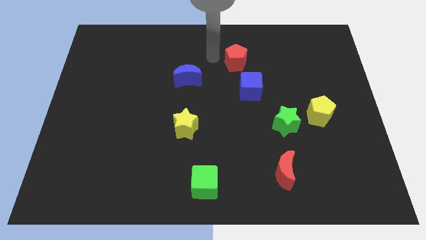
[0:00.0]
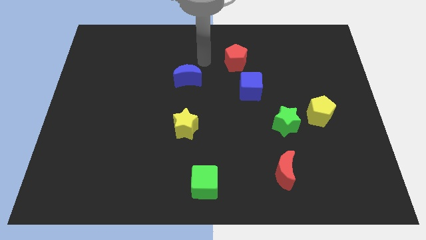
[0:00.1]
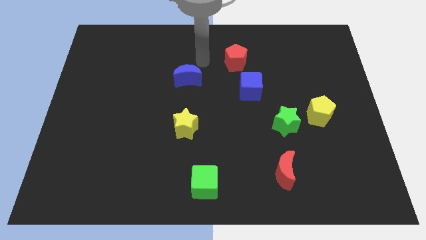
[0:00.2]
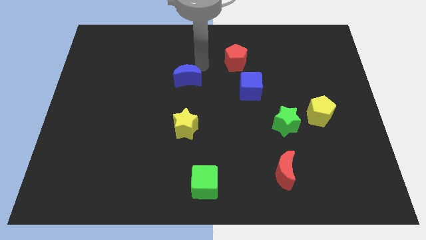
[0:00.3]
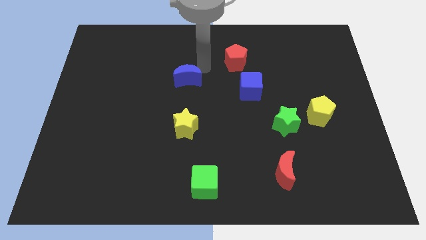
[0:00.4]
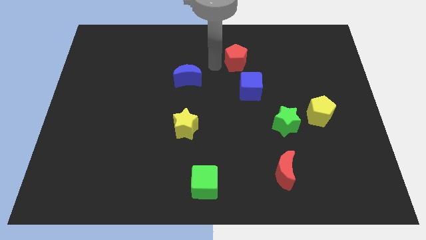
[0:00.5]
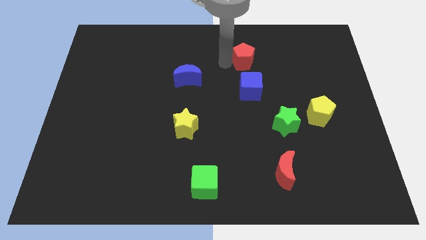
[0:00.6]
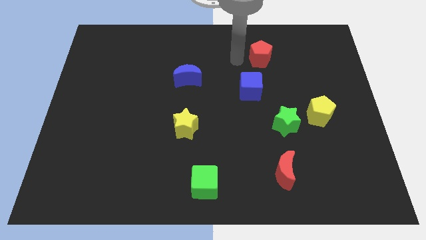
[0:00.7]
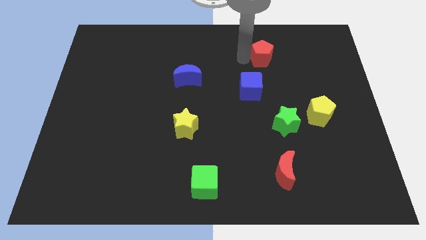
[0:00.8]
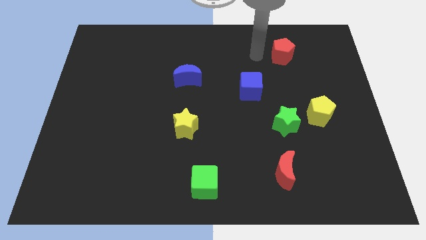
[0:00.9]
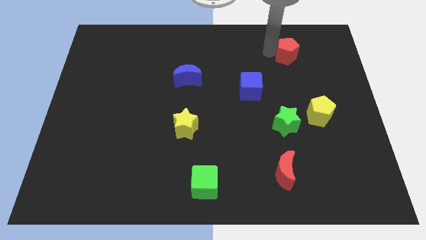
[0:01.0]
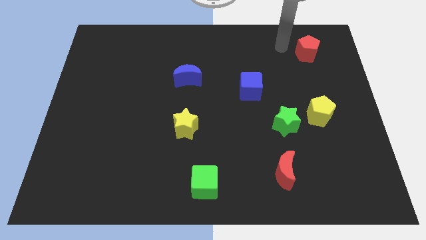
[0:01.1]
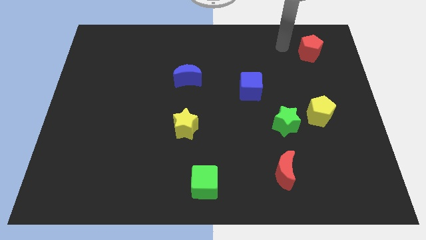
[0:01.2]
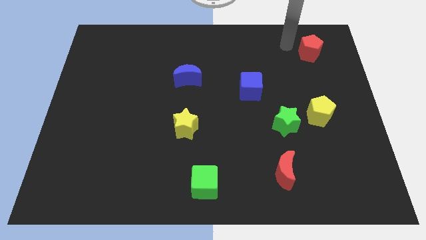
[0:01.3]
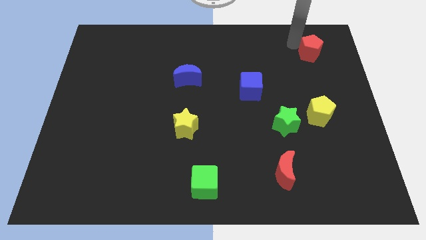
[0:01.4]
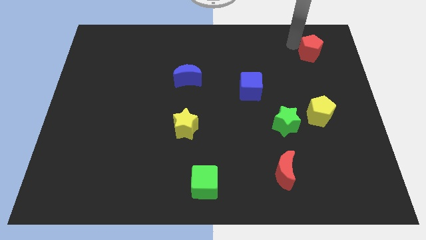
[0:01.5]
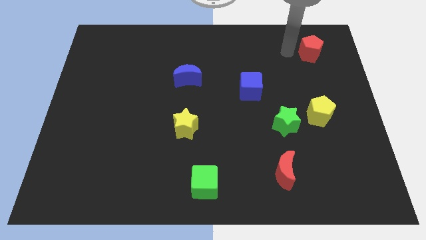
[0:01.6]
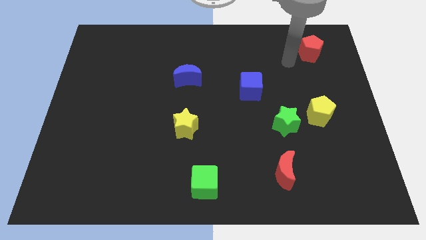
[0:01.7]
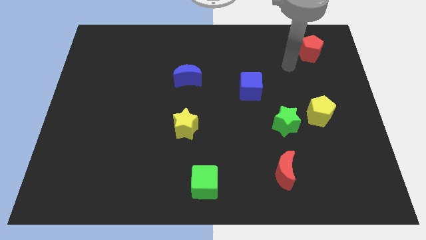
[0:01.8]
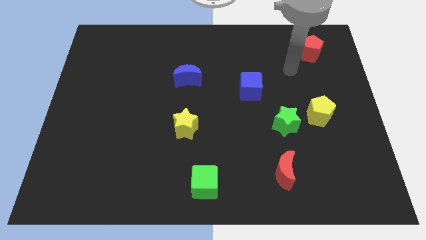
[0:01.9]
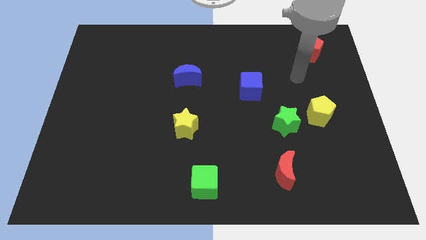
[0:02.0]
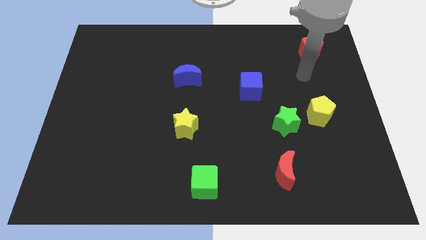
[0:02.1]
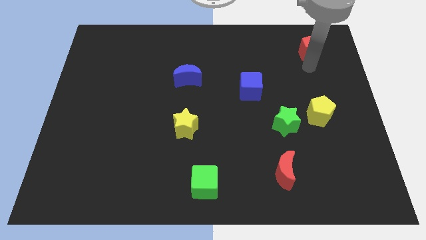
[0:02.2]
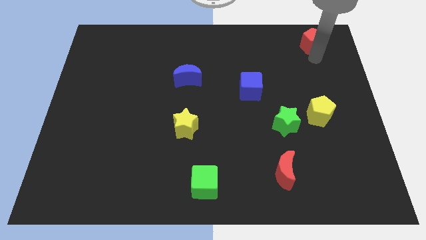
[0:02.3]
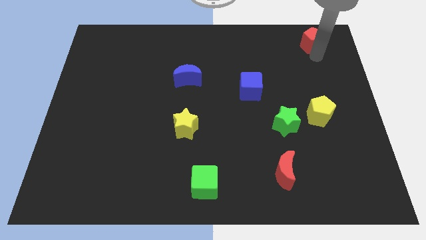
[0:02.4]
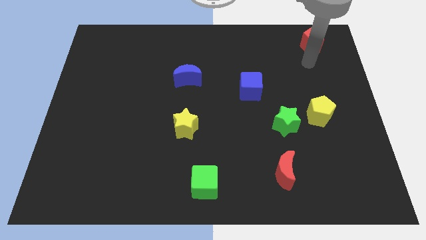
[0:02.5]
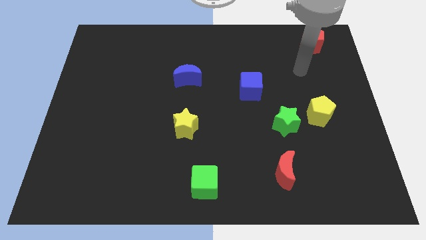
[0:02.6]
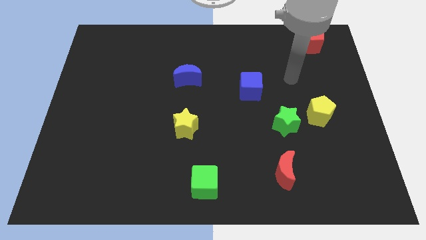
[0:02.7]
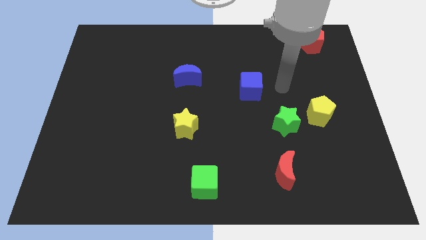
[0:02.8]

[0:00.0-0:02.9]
move the red pentagon to the top right corner of the board

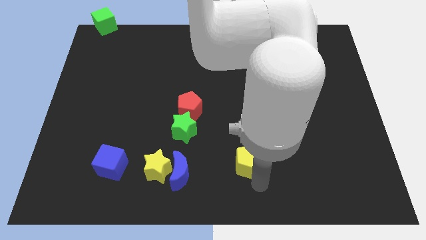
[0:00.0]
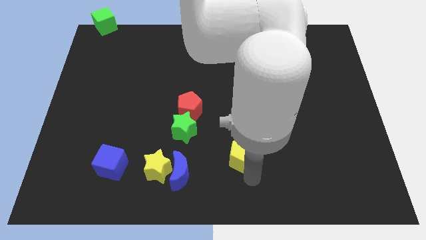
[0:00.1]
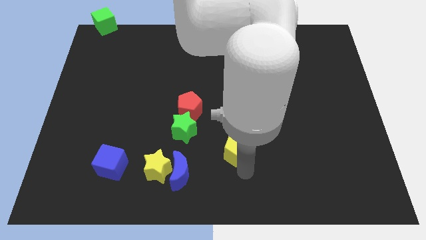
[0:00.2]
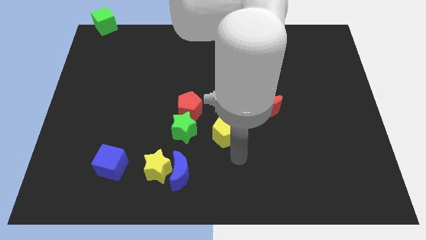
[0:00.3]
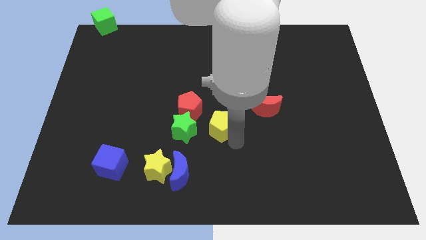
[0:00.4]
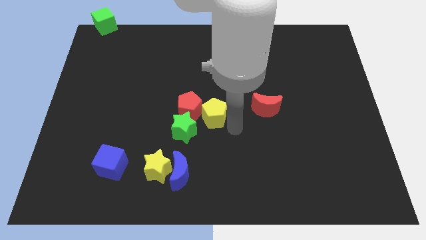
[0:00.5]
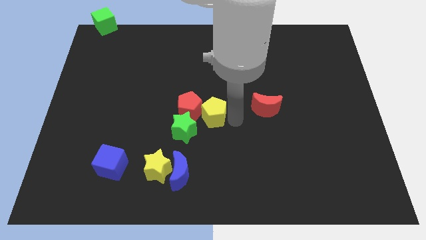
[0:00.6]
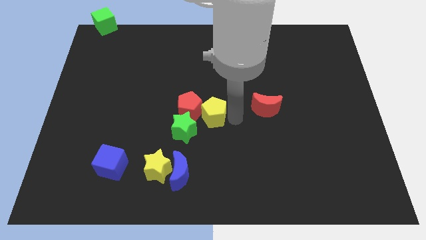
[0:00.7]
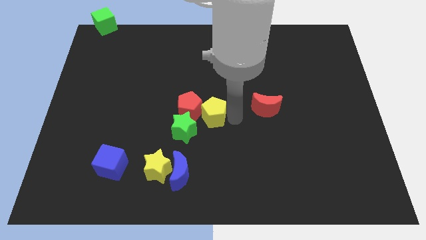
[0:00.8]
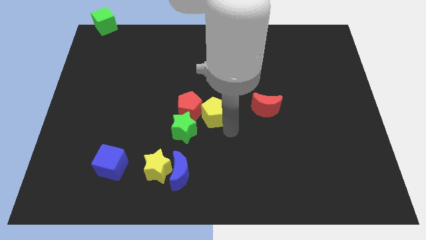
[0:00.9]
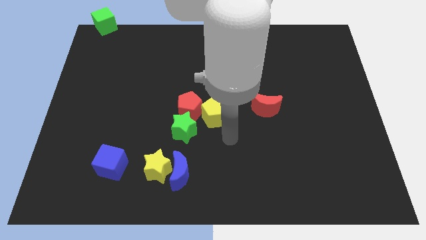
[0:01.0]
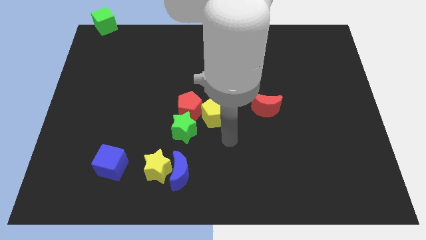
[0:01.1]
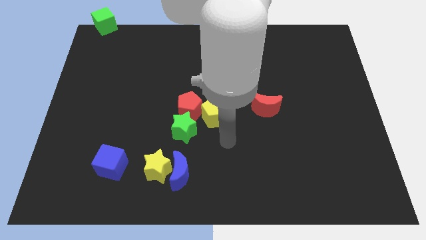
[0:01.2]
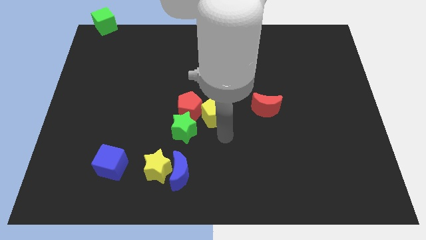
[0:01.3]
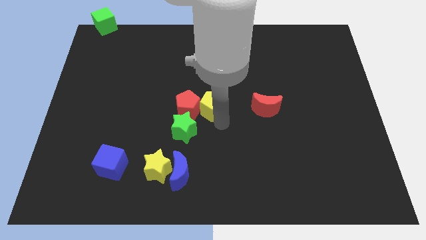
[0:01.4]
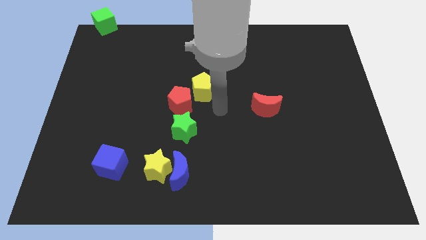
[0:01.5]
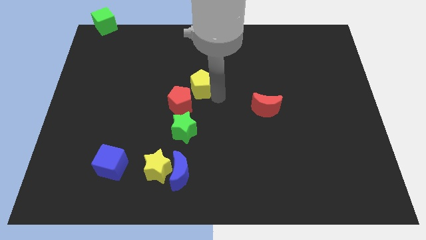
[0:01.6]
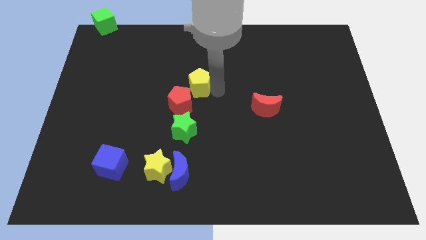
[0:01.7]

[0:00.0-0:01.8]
push the yellow pentagon to the center

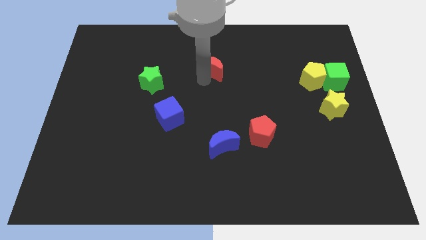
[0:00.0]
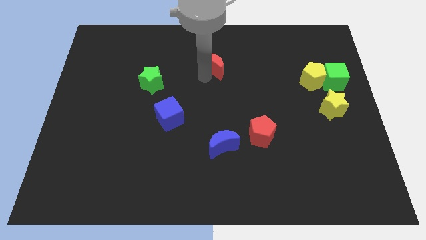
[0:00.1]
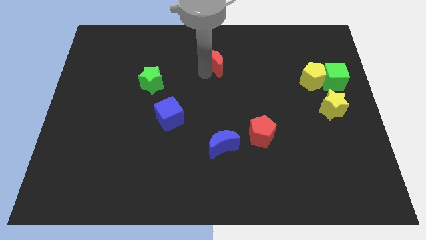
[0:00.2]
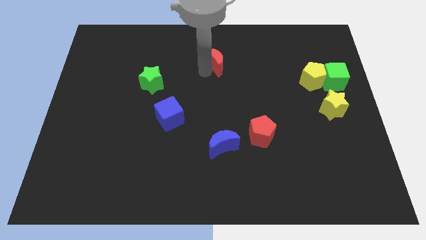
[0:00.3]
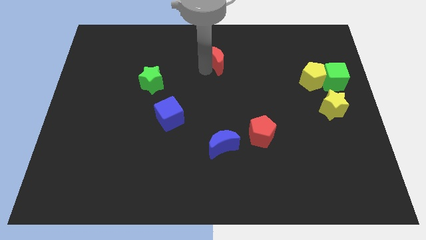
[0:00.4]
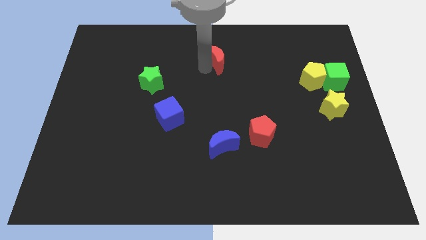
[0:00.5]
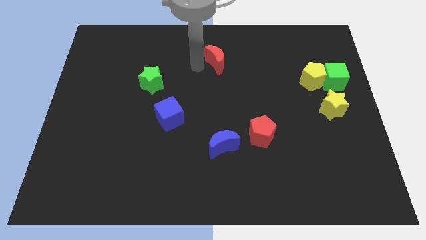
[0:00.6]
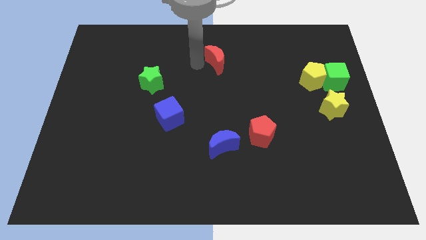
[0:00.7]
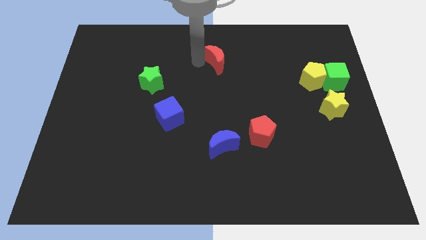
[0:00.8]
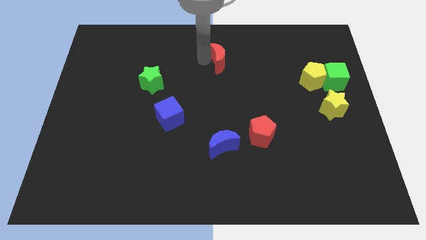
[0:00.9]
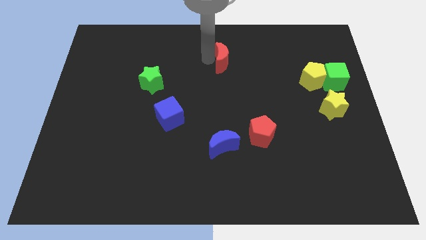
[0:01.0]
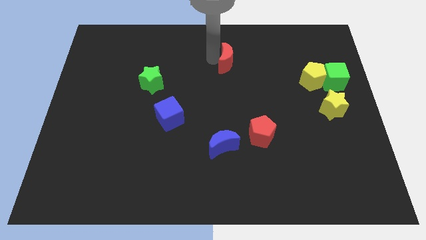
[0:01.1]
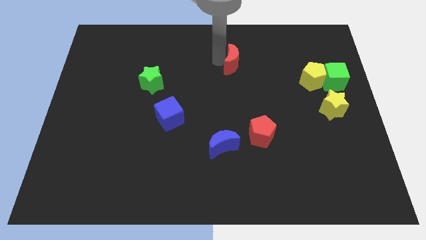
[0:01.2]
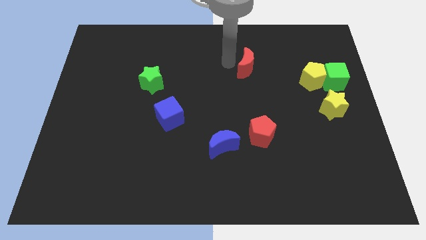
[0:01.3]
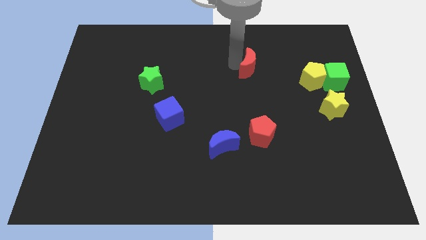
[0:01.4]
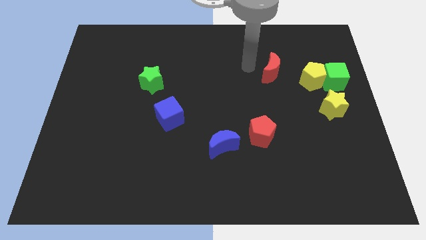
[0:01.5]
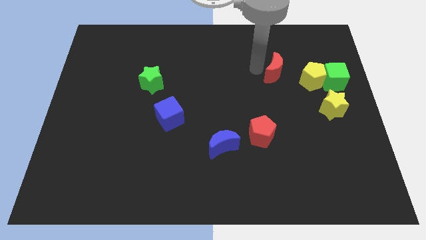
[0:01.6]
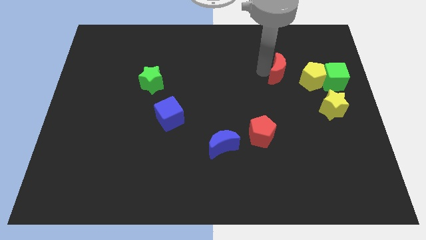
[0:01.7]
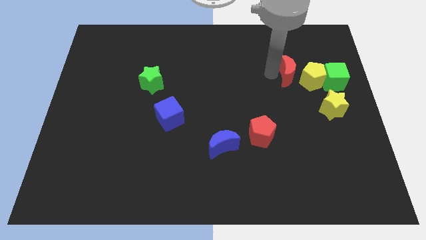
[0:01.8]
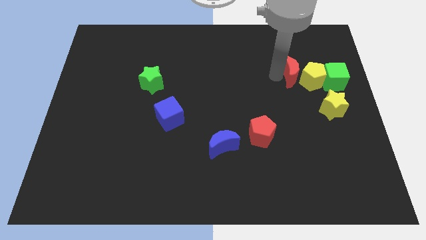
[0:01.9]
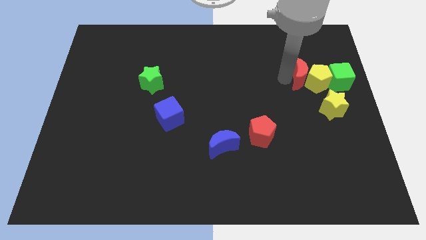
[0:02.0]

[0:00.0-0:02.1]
make the red crescent to touch the yellow pentagon

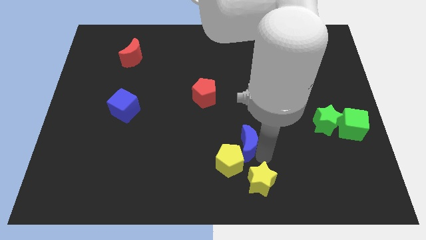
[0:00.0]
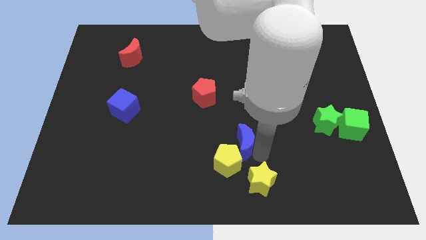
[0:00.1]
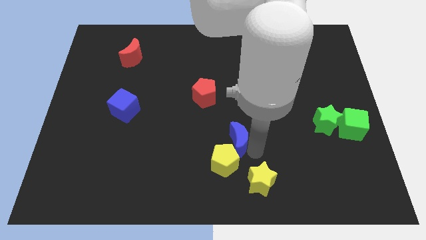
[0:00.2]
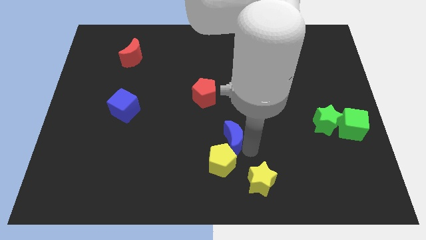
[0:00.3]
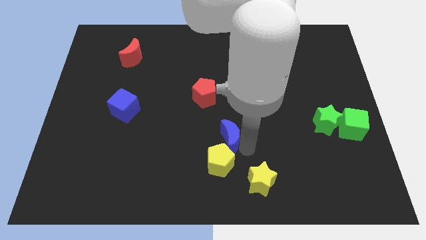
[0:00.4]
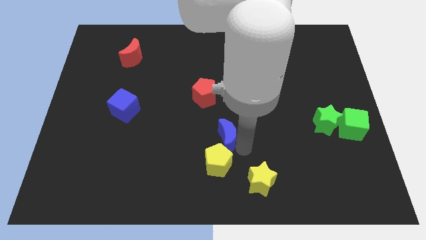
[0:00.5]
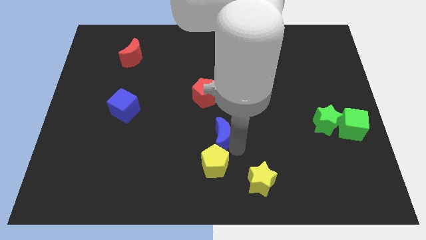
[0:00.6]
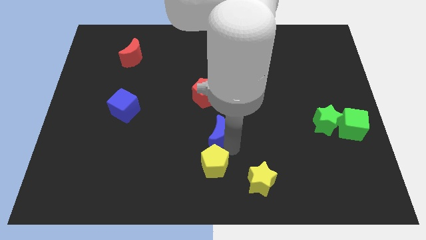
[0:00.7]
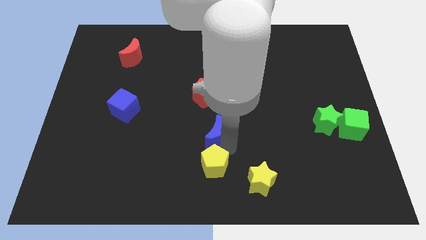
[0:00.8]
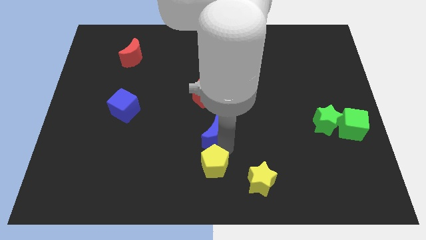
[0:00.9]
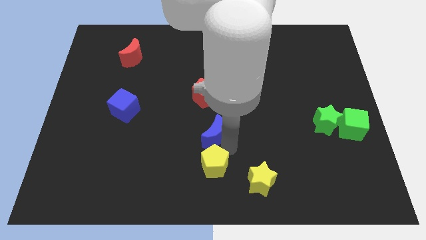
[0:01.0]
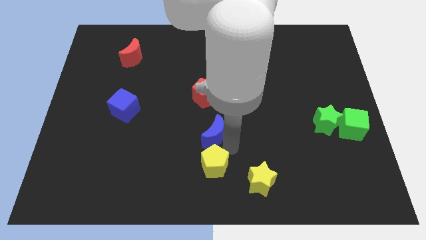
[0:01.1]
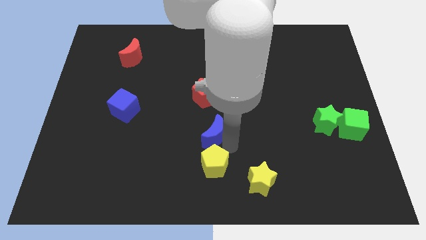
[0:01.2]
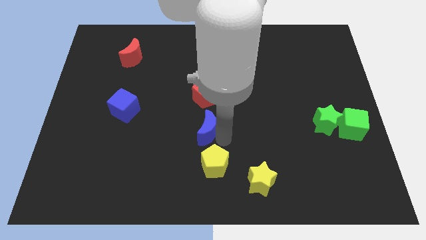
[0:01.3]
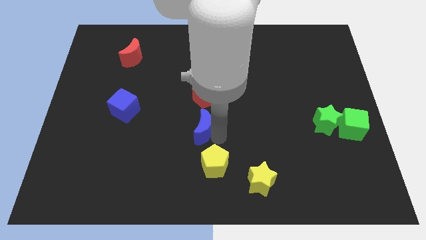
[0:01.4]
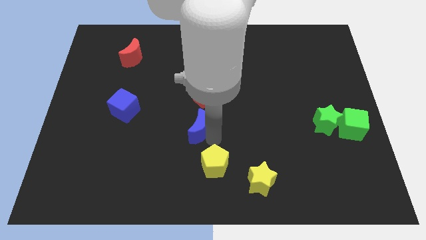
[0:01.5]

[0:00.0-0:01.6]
place the blue moon in between the red pentagon and yellow pentgaon

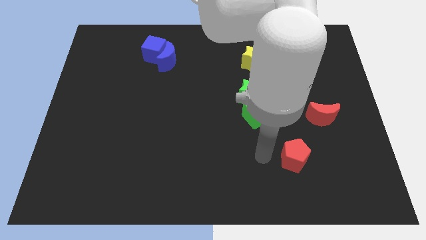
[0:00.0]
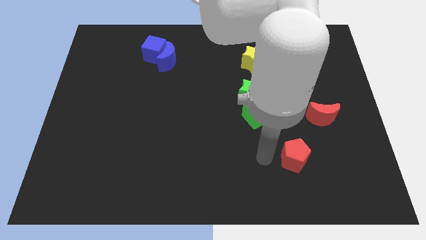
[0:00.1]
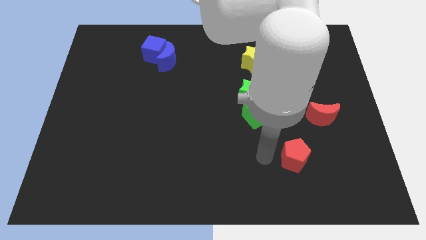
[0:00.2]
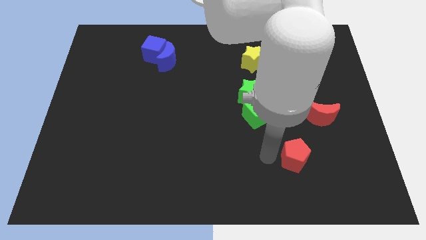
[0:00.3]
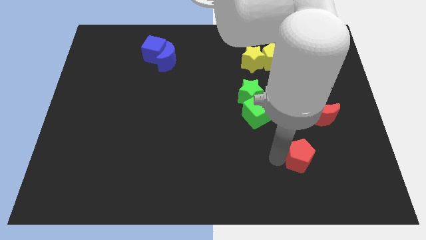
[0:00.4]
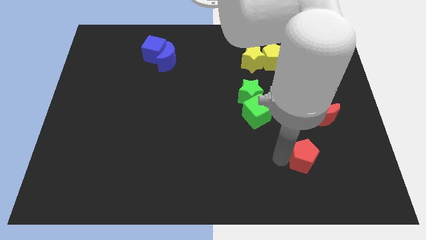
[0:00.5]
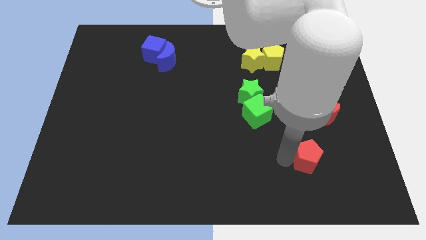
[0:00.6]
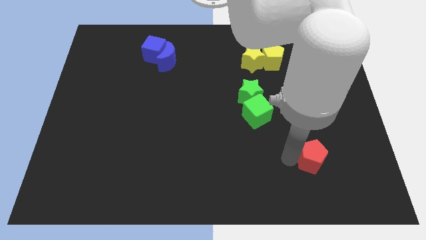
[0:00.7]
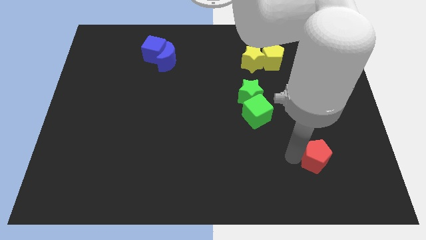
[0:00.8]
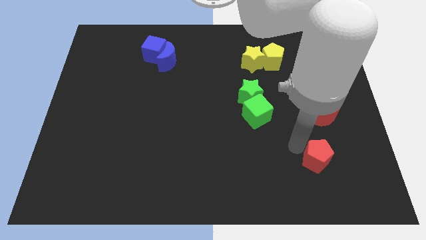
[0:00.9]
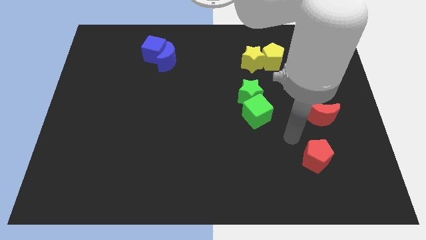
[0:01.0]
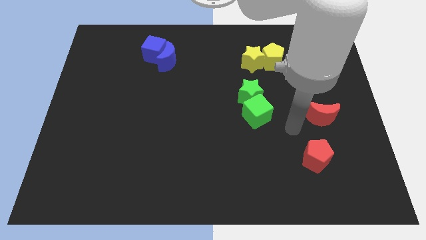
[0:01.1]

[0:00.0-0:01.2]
move the red pentagon to the bottom side of the red moon
